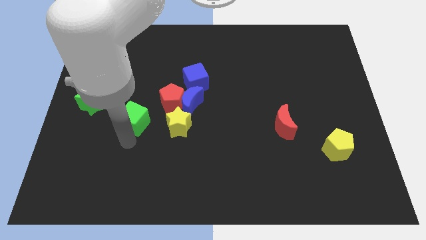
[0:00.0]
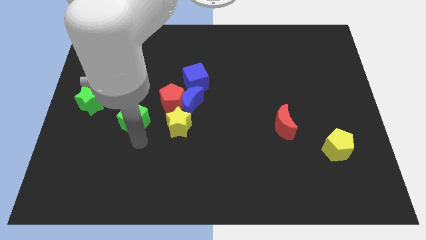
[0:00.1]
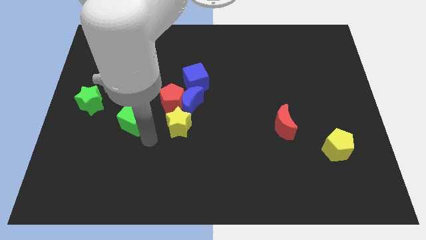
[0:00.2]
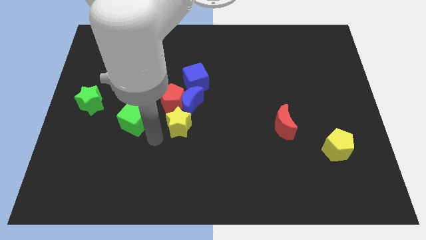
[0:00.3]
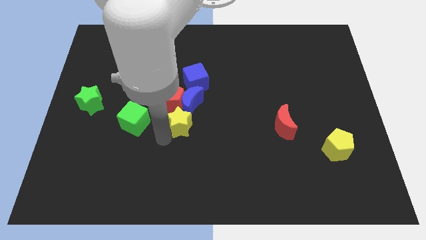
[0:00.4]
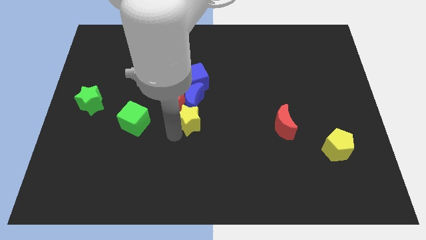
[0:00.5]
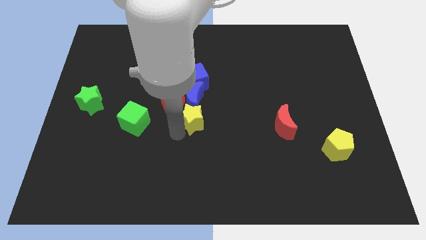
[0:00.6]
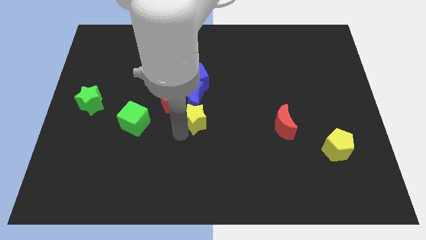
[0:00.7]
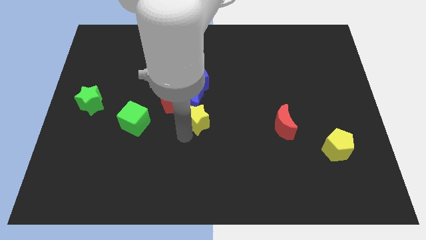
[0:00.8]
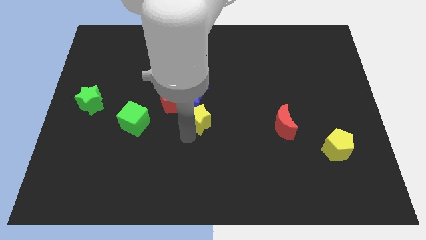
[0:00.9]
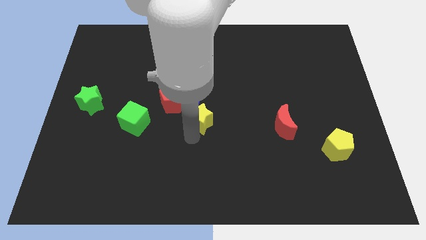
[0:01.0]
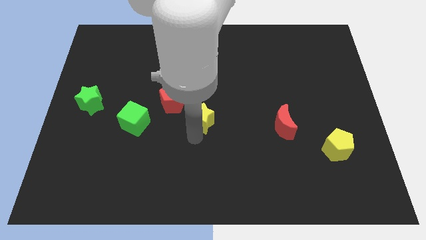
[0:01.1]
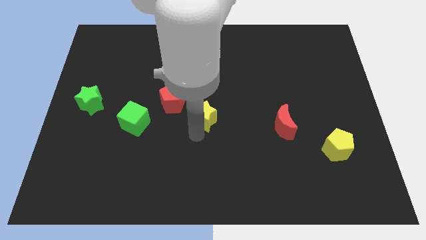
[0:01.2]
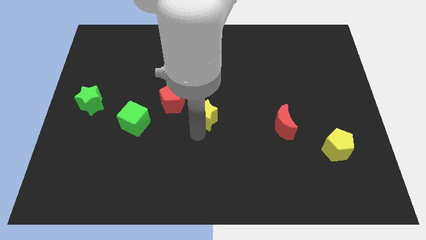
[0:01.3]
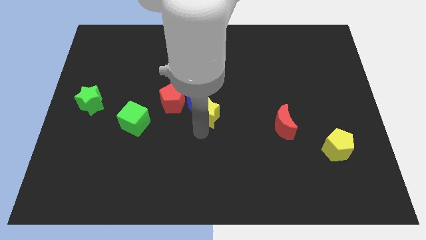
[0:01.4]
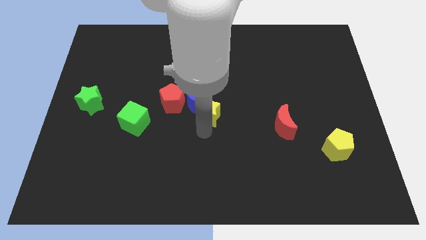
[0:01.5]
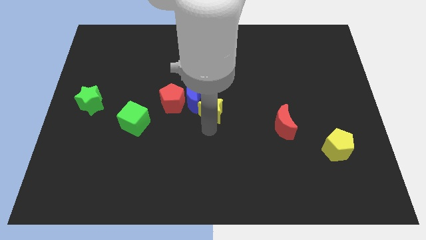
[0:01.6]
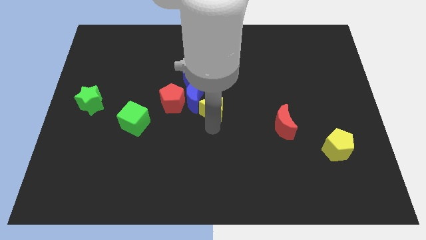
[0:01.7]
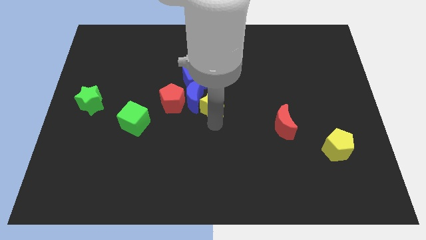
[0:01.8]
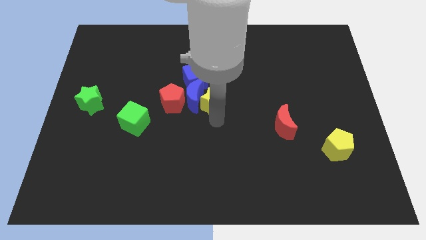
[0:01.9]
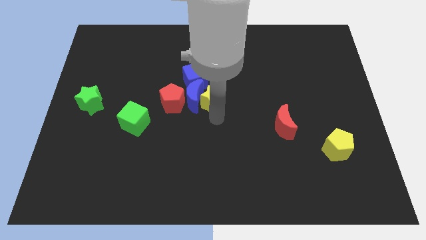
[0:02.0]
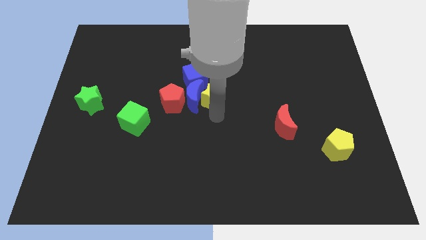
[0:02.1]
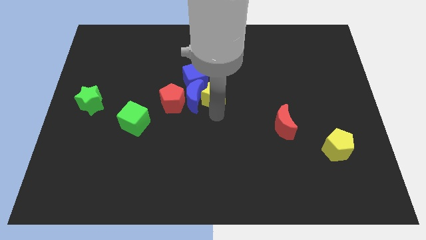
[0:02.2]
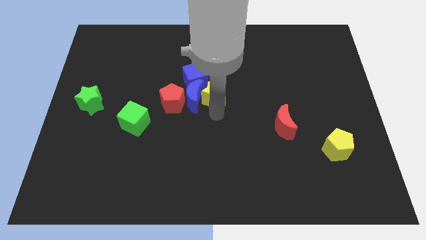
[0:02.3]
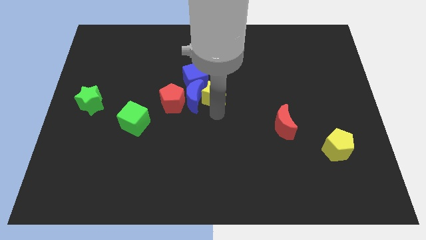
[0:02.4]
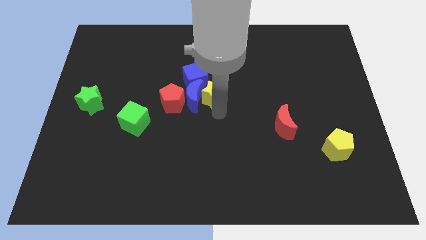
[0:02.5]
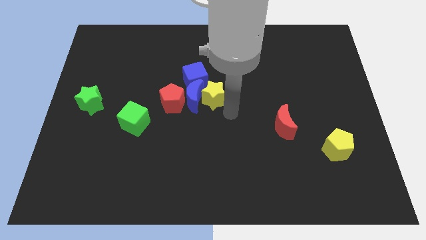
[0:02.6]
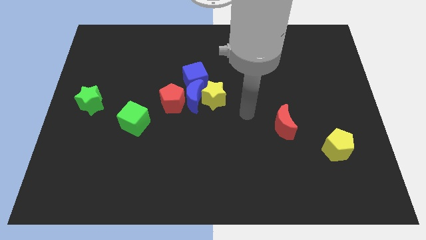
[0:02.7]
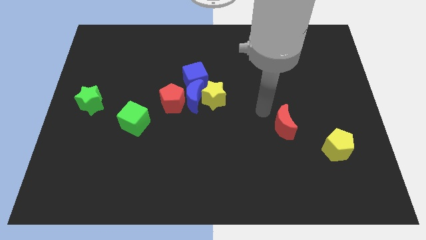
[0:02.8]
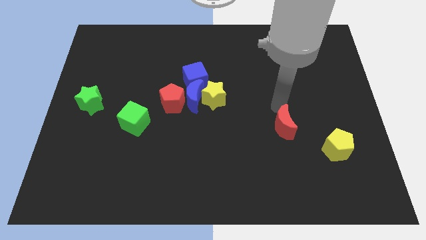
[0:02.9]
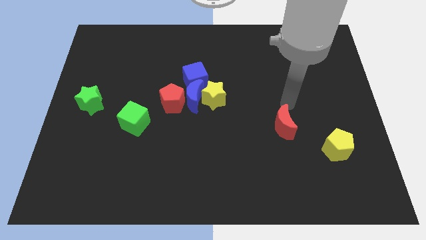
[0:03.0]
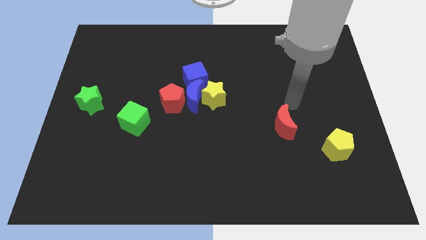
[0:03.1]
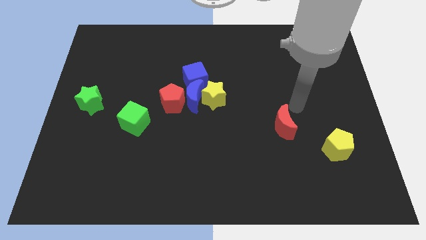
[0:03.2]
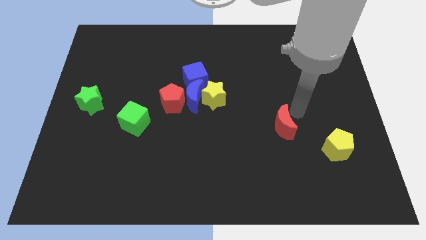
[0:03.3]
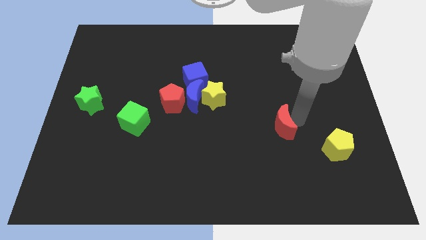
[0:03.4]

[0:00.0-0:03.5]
place the yellow star to the right of the blue crescent

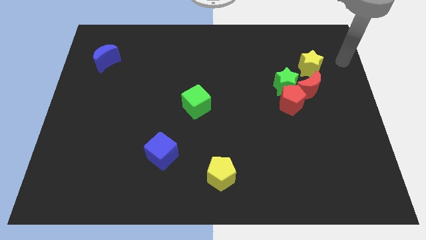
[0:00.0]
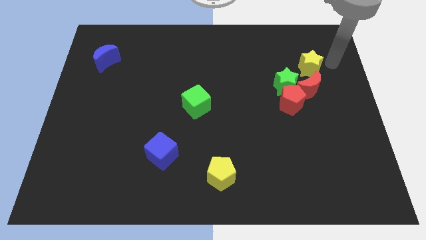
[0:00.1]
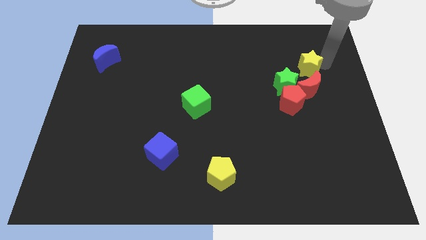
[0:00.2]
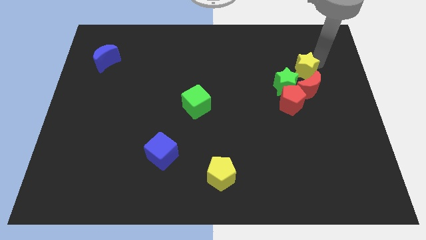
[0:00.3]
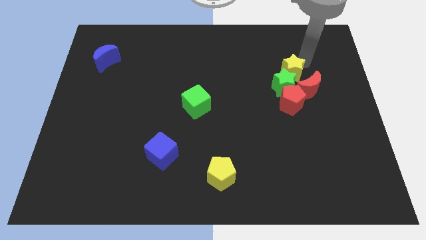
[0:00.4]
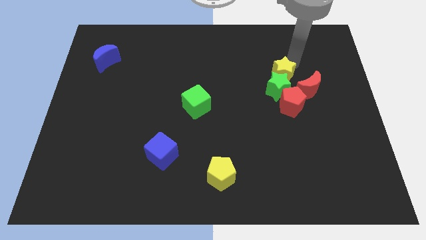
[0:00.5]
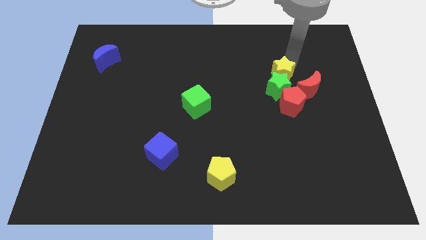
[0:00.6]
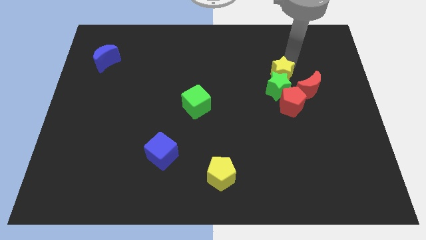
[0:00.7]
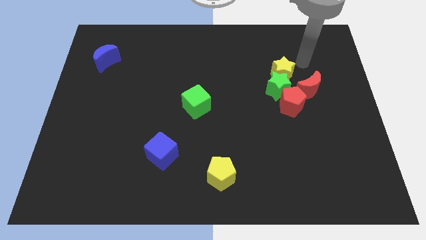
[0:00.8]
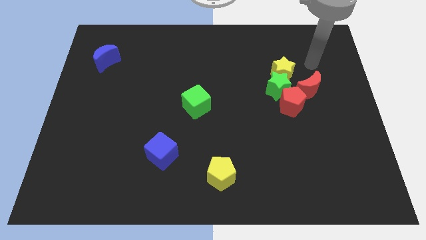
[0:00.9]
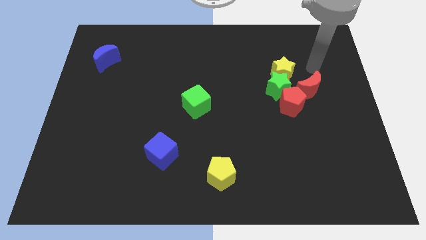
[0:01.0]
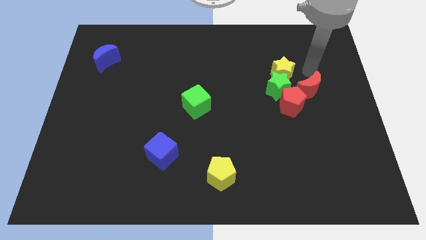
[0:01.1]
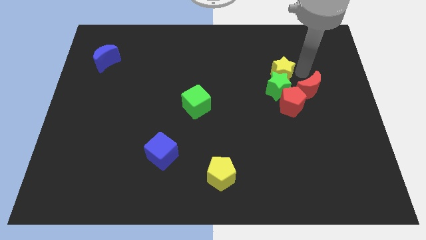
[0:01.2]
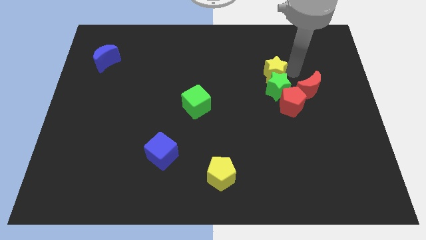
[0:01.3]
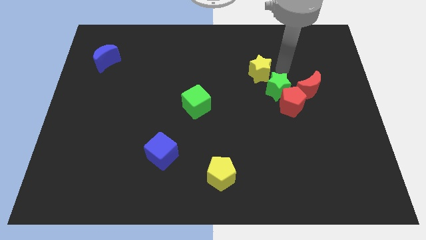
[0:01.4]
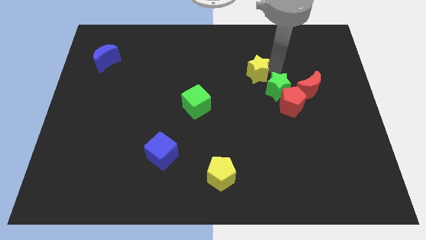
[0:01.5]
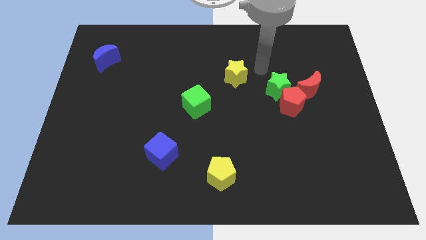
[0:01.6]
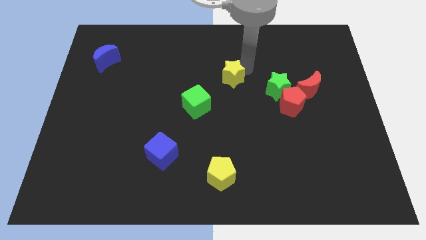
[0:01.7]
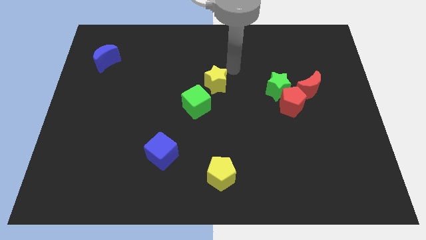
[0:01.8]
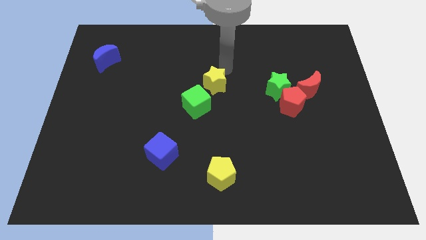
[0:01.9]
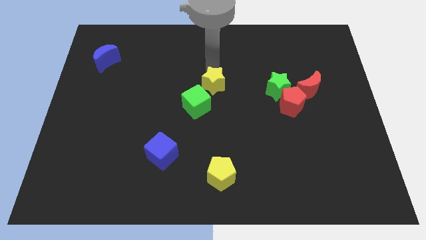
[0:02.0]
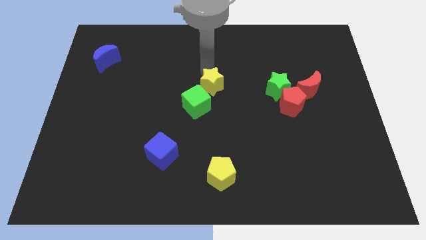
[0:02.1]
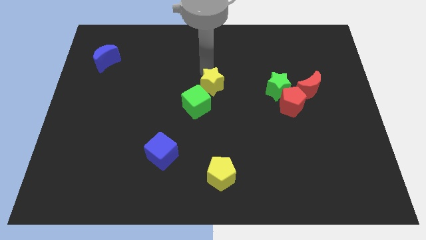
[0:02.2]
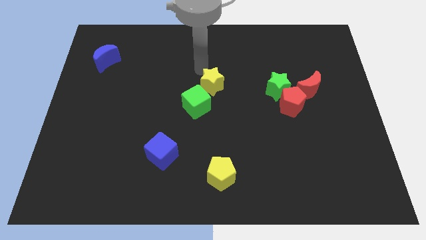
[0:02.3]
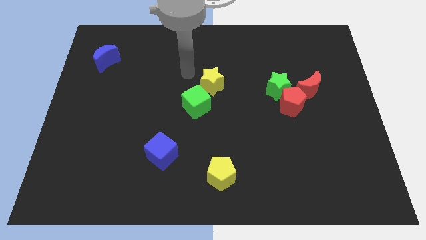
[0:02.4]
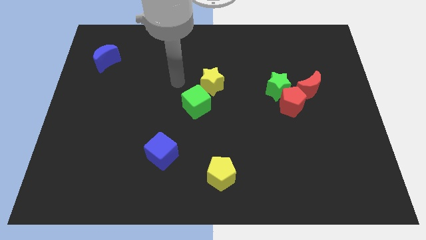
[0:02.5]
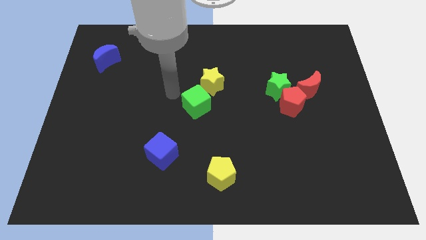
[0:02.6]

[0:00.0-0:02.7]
move the yellow star above the green cube to the center of the board

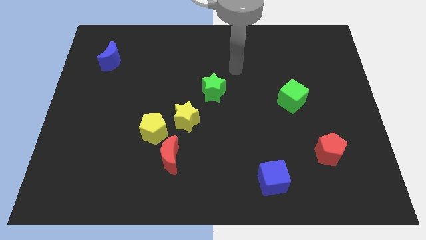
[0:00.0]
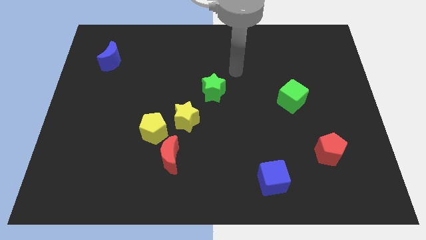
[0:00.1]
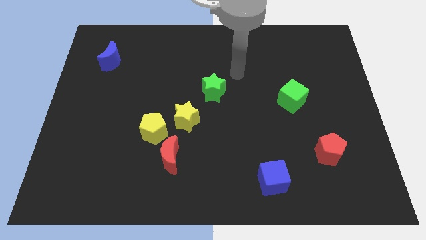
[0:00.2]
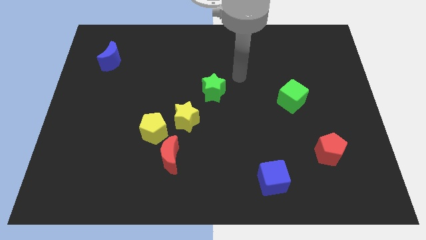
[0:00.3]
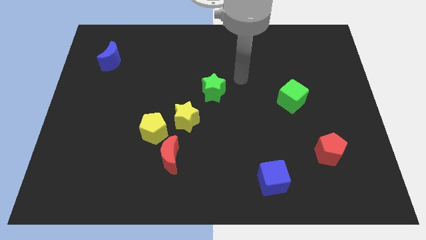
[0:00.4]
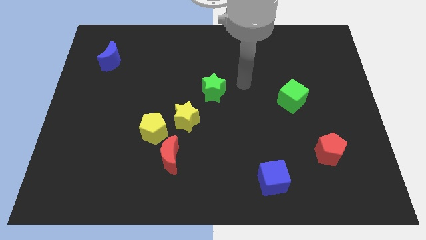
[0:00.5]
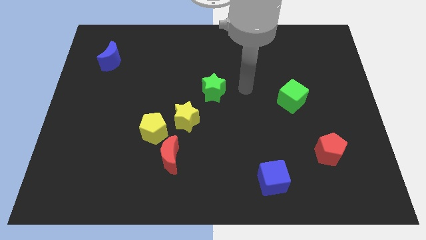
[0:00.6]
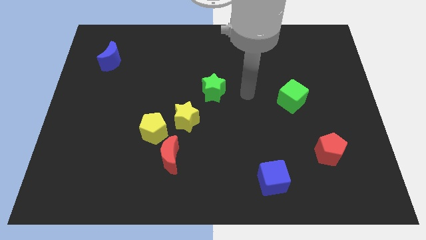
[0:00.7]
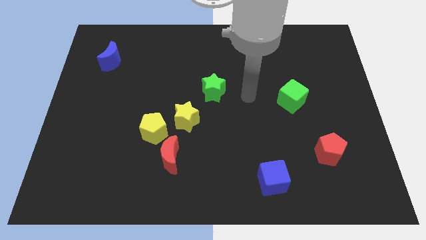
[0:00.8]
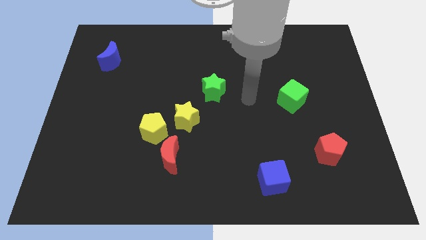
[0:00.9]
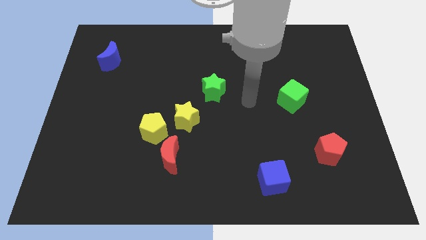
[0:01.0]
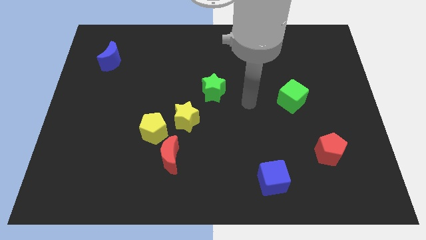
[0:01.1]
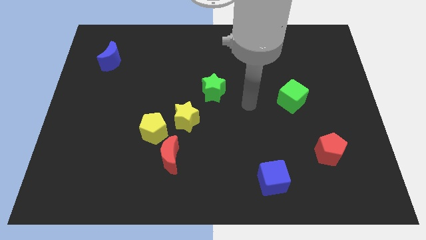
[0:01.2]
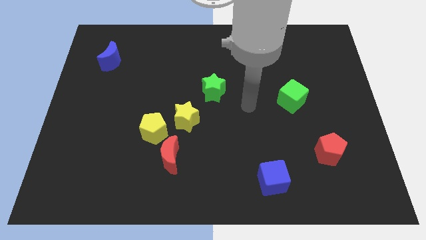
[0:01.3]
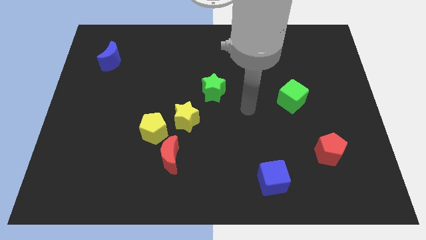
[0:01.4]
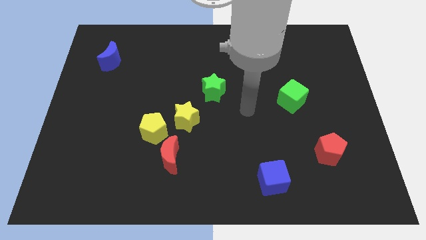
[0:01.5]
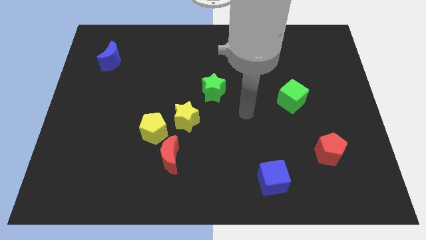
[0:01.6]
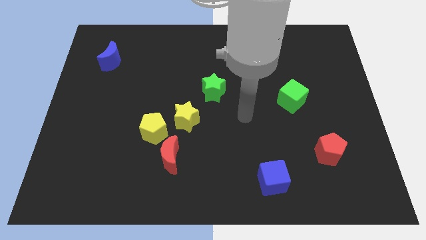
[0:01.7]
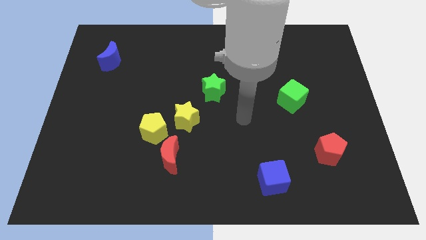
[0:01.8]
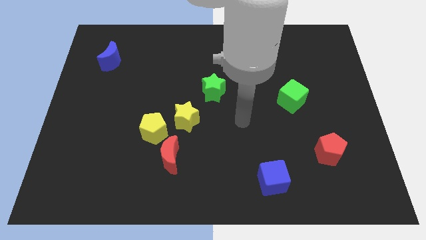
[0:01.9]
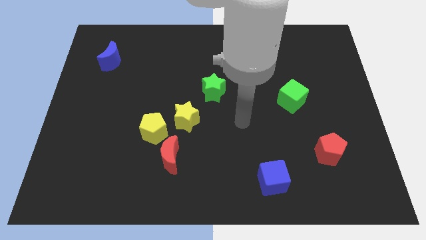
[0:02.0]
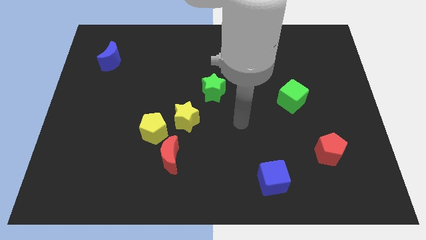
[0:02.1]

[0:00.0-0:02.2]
move the arm parallel right to the yellow star

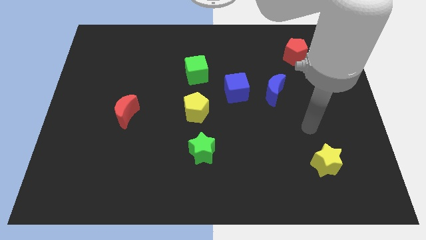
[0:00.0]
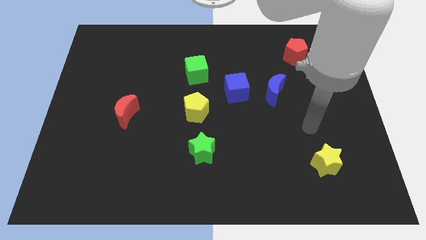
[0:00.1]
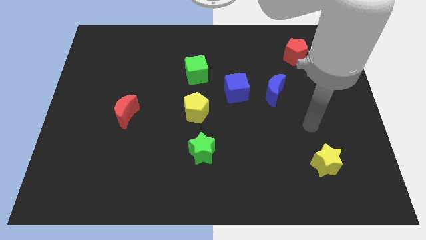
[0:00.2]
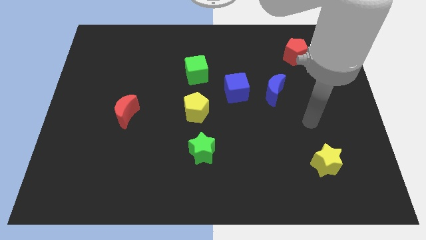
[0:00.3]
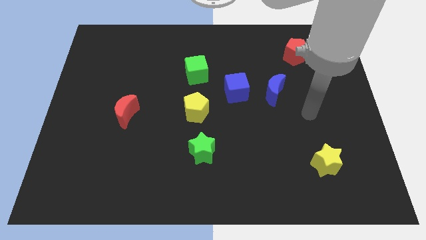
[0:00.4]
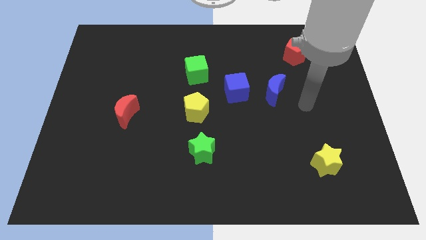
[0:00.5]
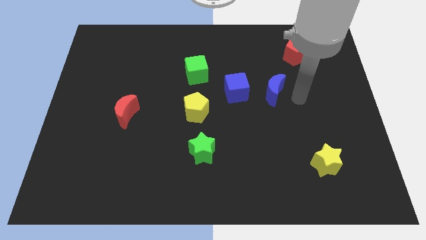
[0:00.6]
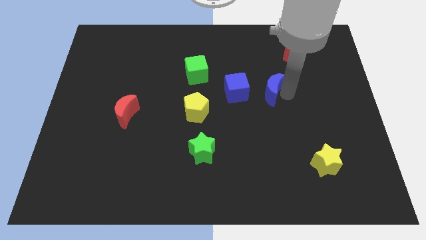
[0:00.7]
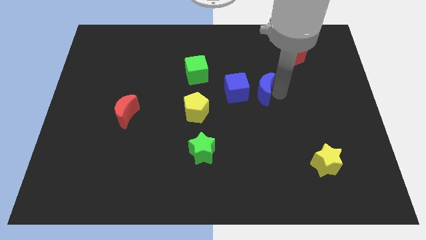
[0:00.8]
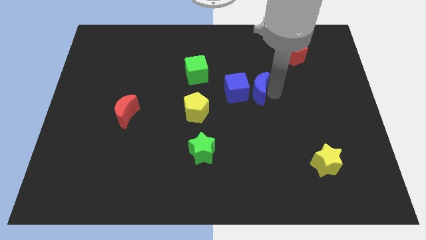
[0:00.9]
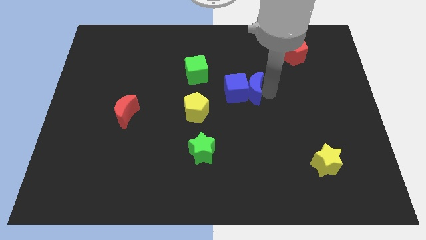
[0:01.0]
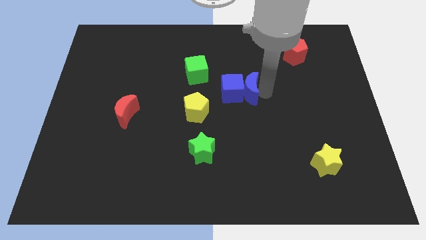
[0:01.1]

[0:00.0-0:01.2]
move the blue moon into the blue cube
